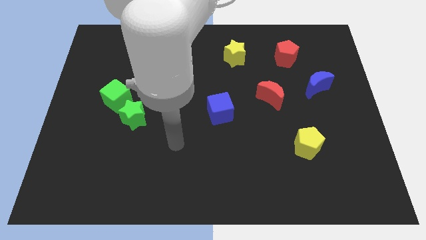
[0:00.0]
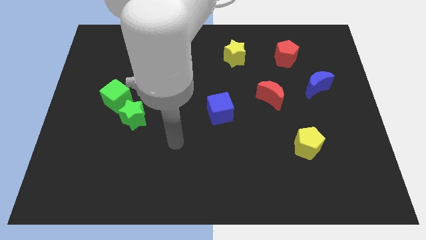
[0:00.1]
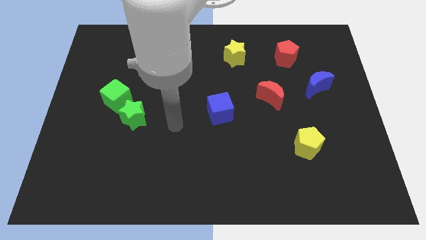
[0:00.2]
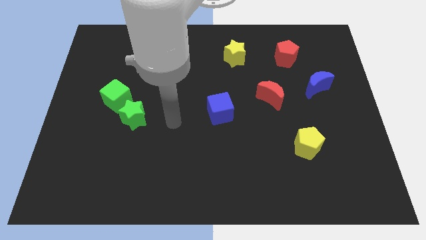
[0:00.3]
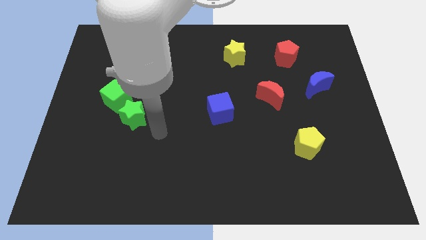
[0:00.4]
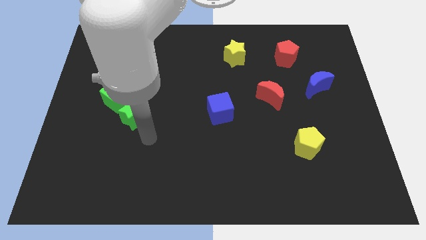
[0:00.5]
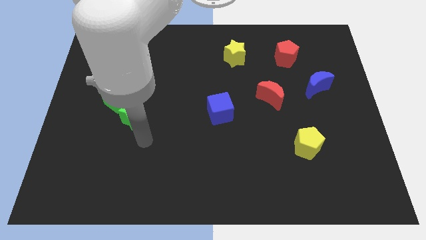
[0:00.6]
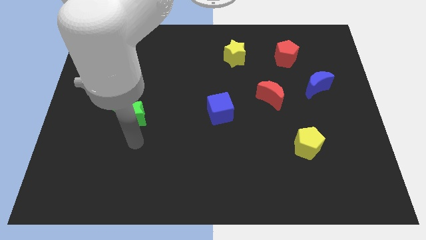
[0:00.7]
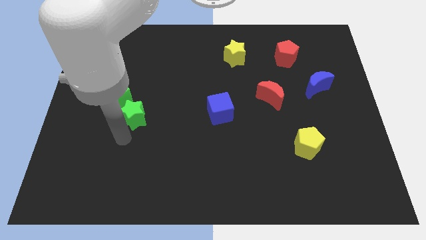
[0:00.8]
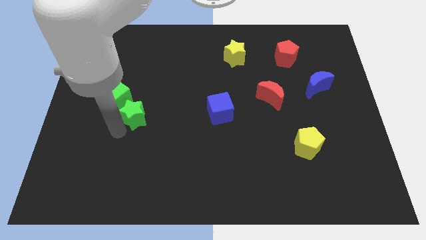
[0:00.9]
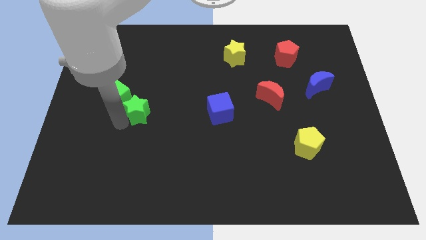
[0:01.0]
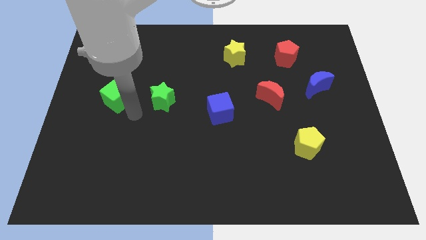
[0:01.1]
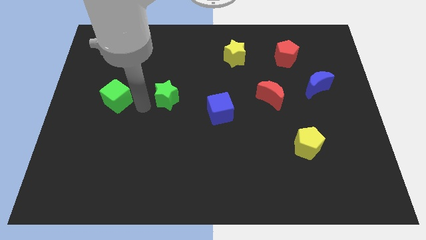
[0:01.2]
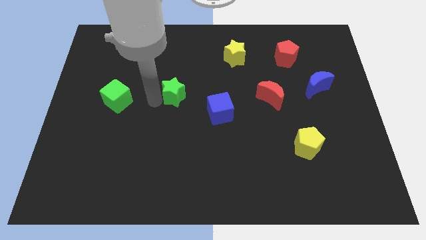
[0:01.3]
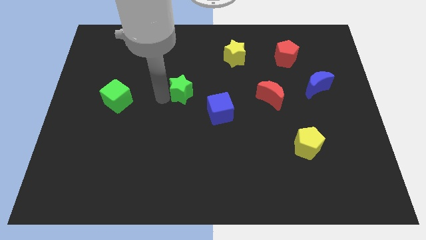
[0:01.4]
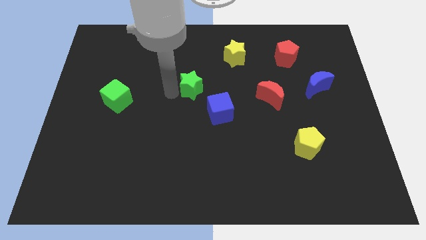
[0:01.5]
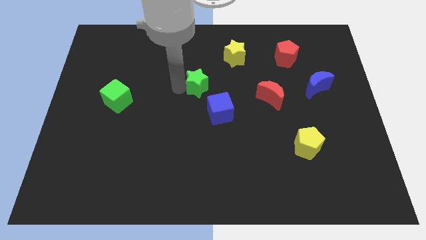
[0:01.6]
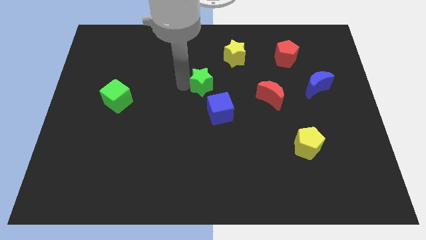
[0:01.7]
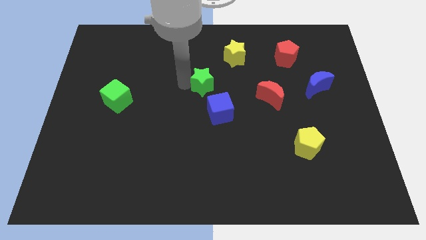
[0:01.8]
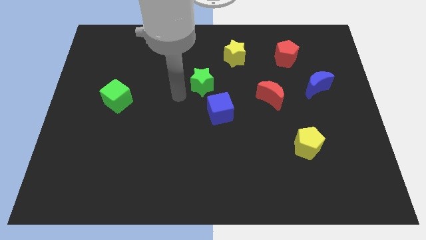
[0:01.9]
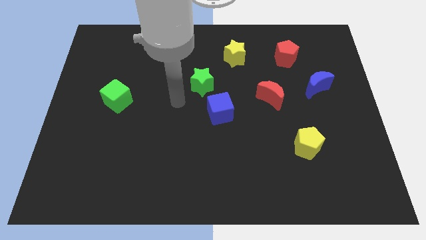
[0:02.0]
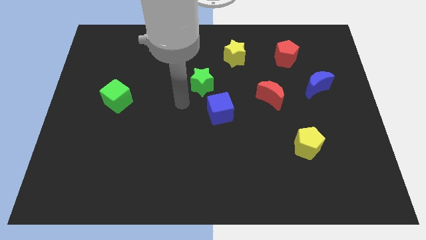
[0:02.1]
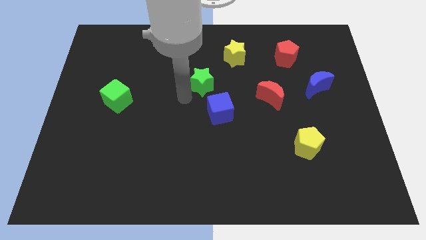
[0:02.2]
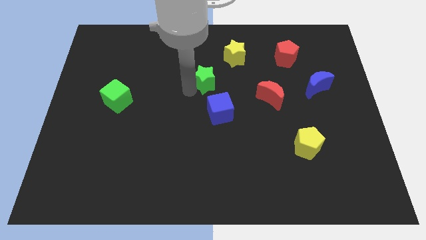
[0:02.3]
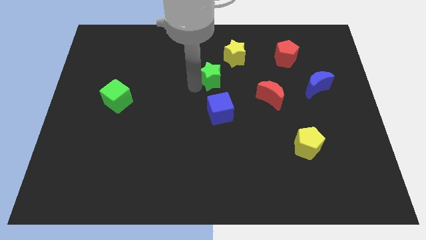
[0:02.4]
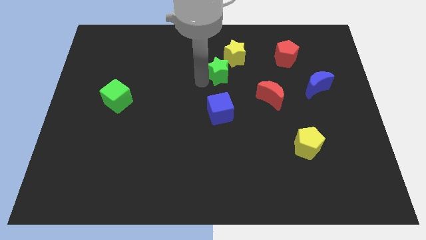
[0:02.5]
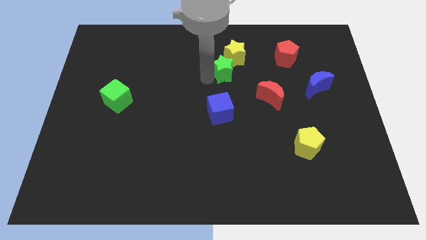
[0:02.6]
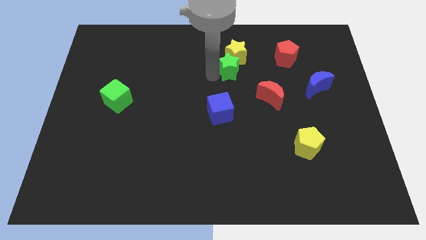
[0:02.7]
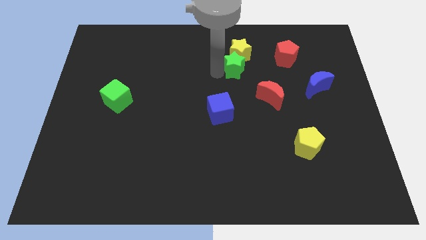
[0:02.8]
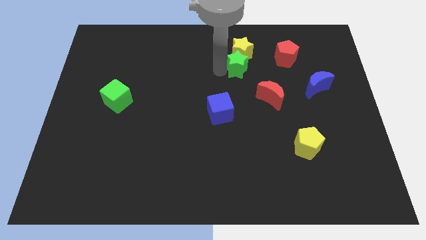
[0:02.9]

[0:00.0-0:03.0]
move the green star towards the yellow star

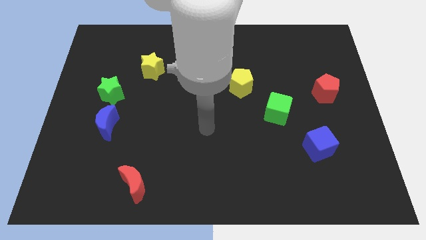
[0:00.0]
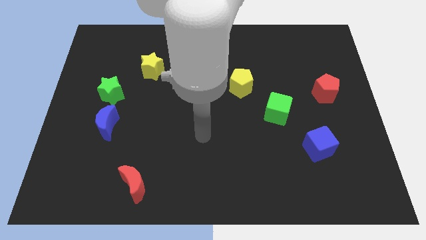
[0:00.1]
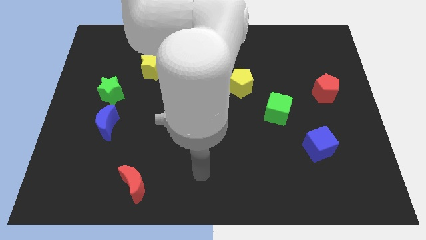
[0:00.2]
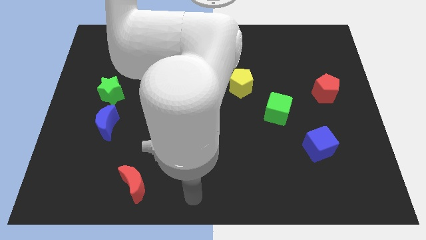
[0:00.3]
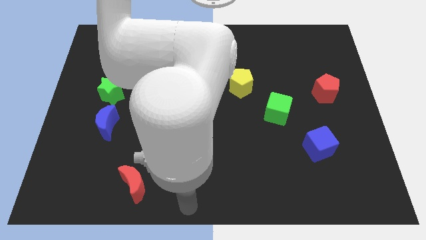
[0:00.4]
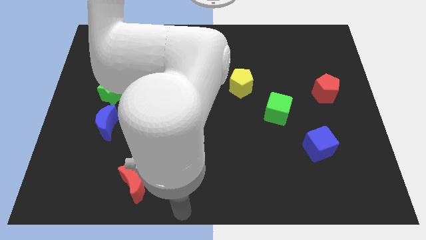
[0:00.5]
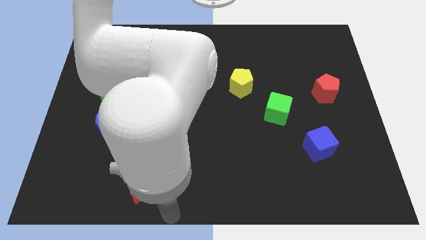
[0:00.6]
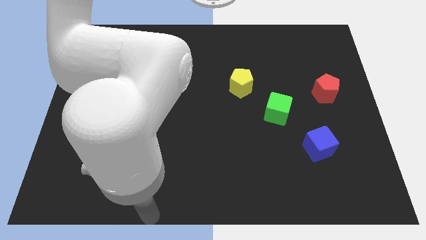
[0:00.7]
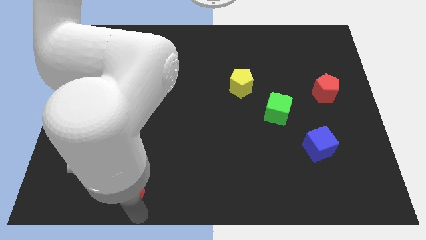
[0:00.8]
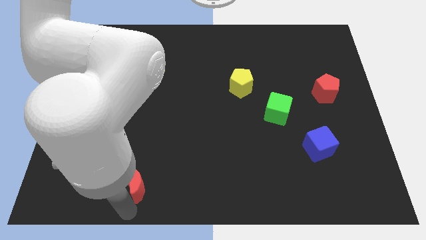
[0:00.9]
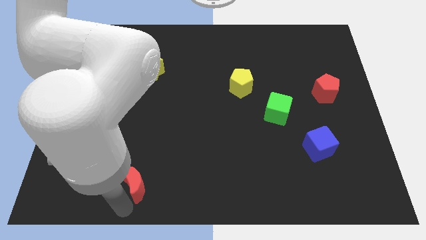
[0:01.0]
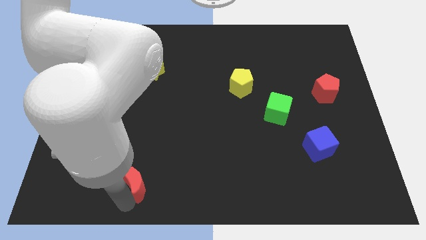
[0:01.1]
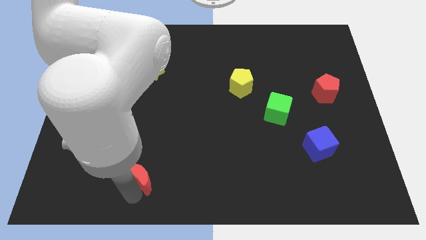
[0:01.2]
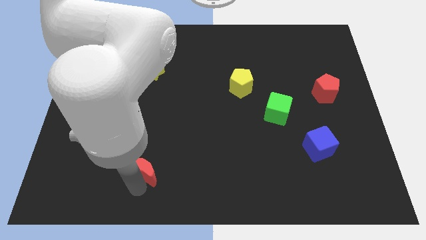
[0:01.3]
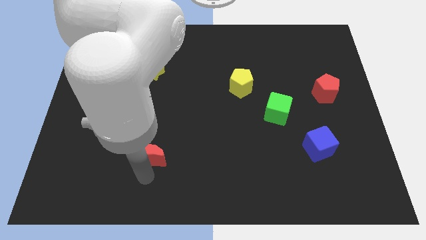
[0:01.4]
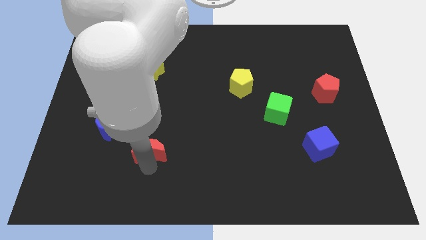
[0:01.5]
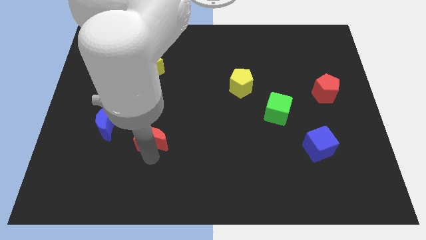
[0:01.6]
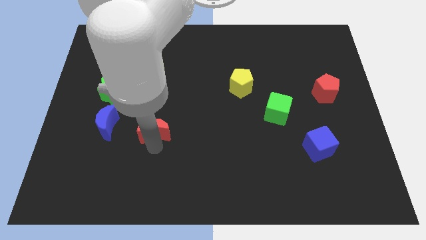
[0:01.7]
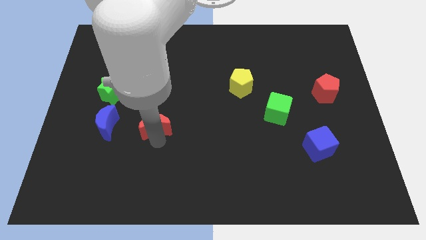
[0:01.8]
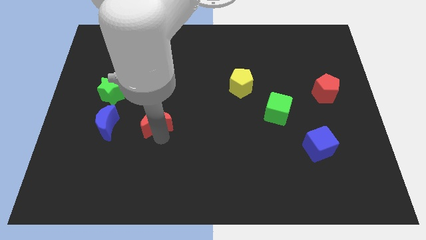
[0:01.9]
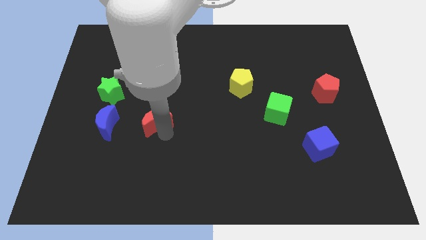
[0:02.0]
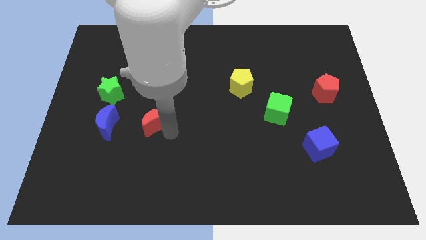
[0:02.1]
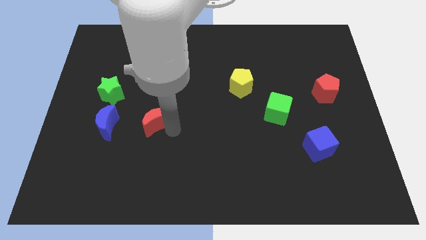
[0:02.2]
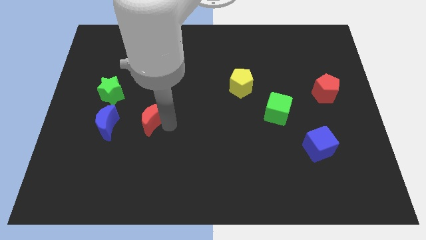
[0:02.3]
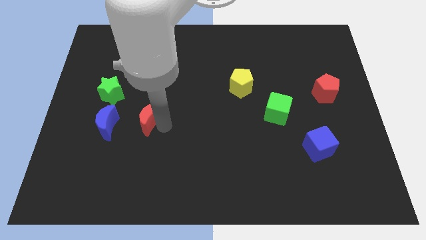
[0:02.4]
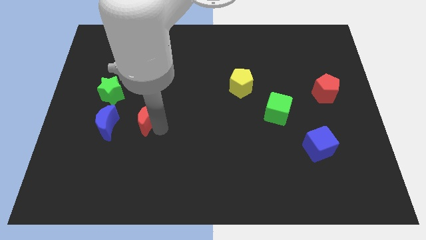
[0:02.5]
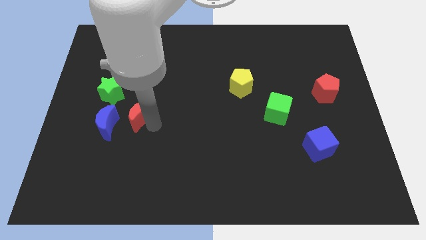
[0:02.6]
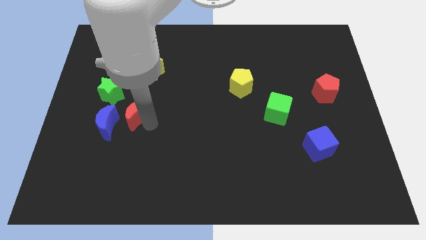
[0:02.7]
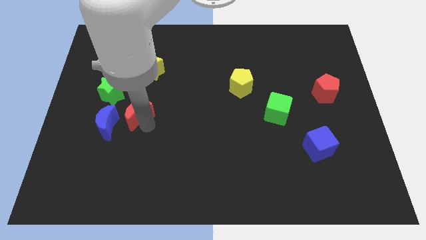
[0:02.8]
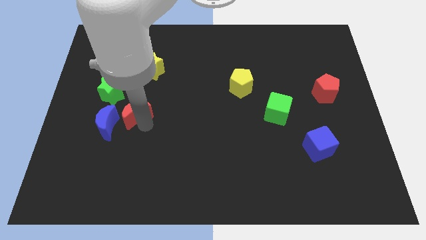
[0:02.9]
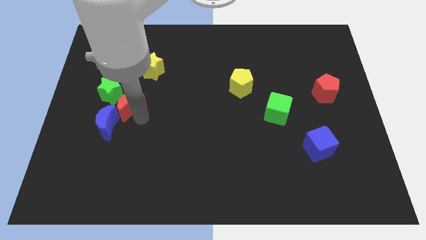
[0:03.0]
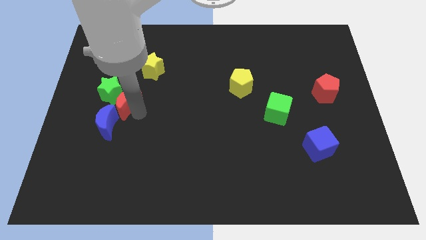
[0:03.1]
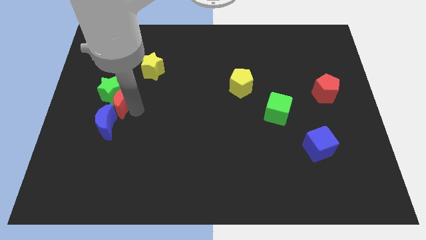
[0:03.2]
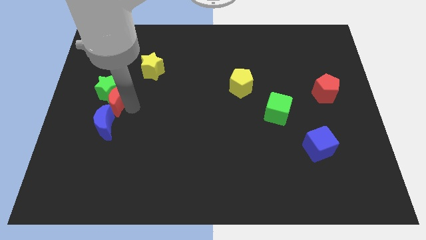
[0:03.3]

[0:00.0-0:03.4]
slide the red moon to the green star

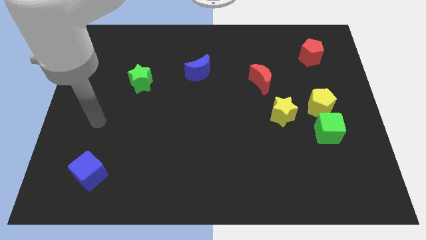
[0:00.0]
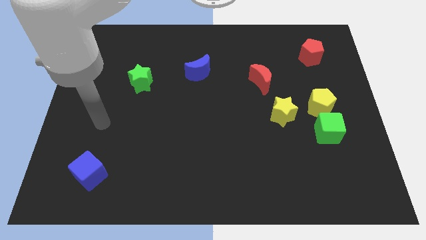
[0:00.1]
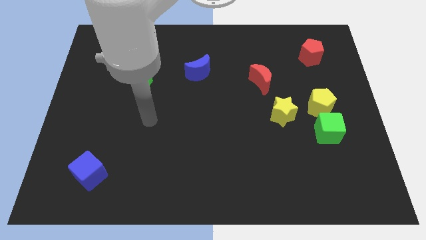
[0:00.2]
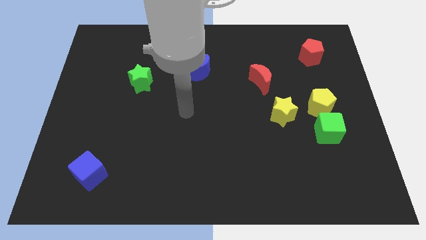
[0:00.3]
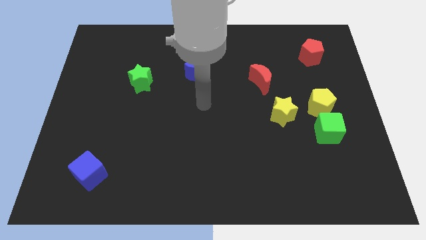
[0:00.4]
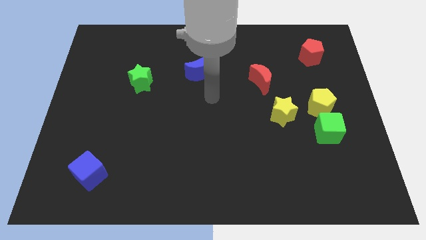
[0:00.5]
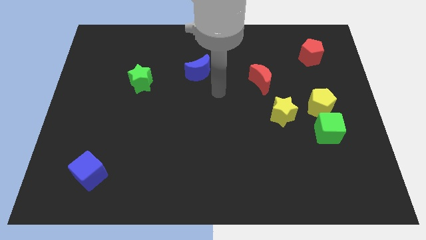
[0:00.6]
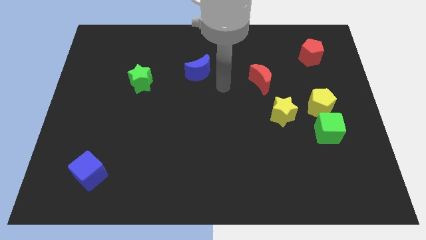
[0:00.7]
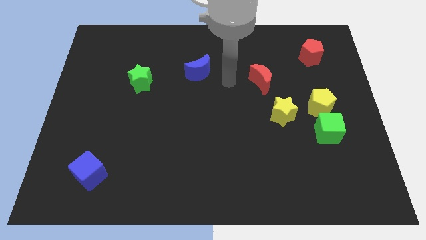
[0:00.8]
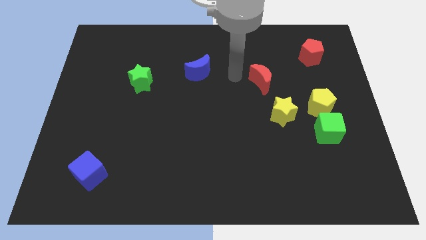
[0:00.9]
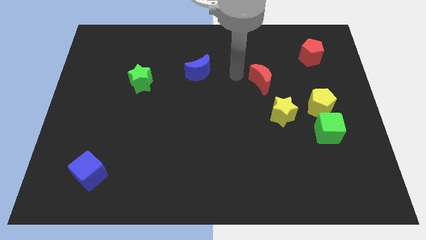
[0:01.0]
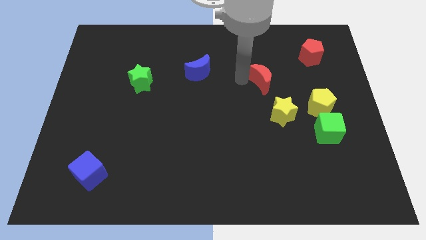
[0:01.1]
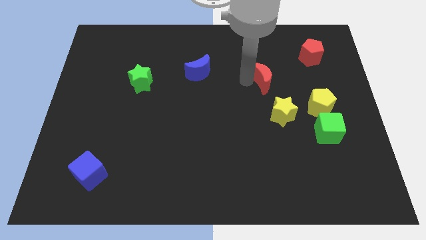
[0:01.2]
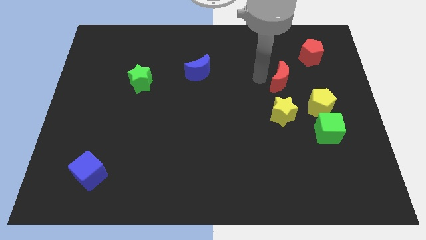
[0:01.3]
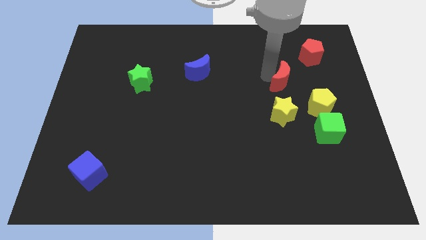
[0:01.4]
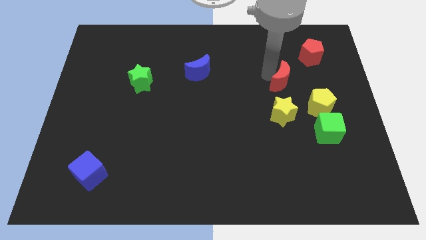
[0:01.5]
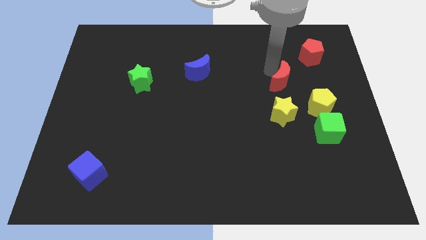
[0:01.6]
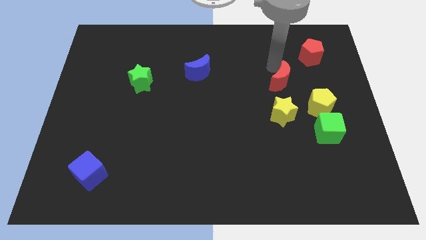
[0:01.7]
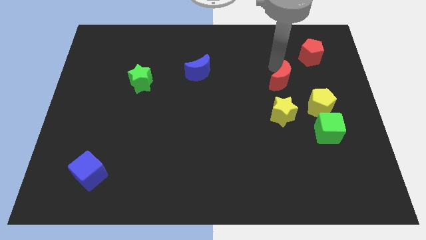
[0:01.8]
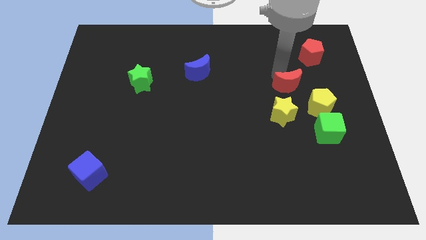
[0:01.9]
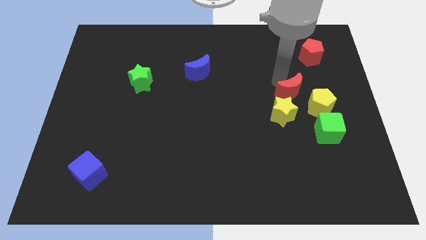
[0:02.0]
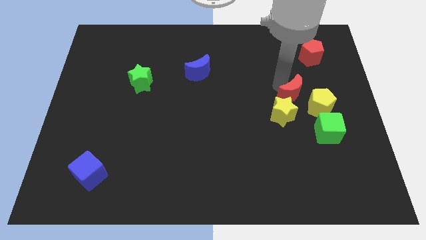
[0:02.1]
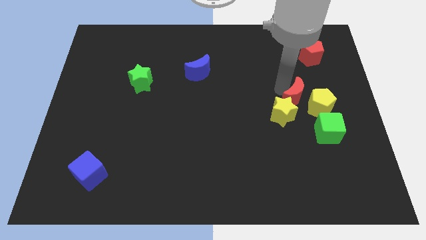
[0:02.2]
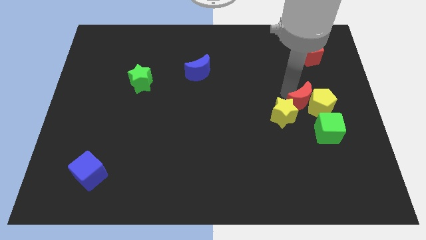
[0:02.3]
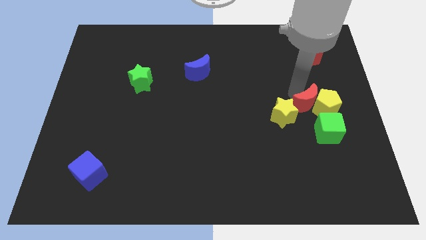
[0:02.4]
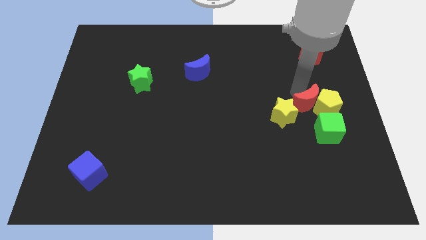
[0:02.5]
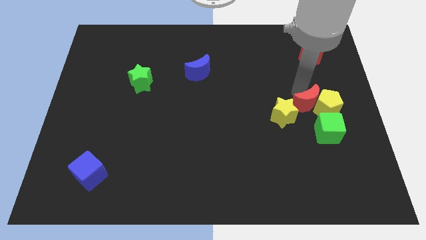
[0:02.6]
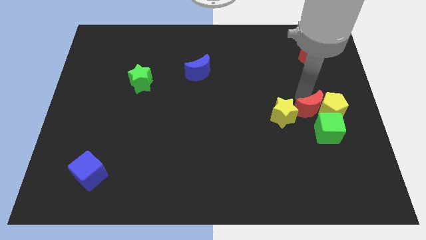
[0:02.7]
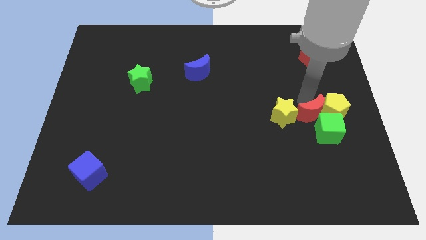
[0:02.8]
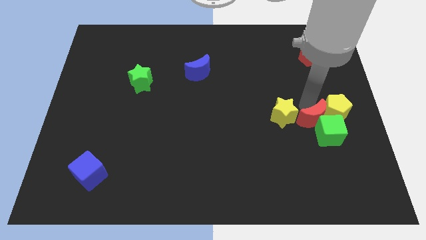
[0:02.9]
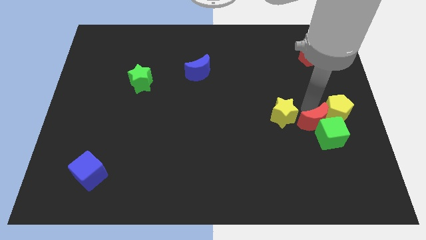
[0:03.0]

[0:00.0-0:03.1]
move the red moon to the green cube
